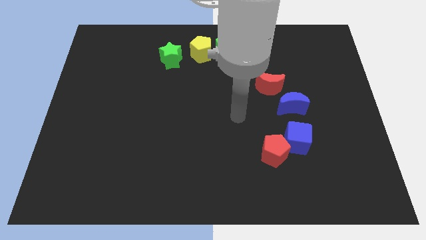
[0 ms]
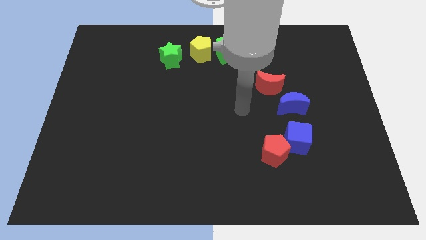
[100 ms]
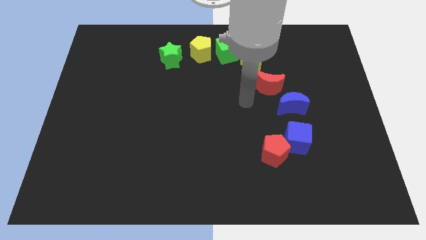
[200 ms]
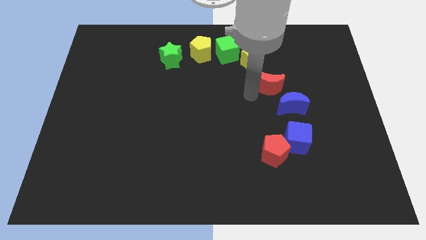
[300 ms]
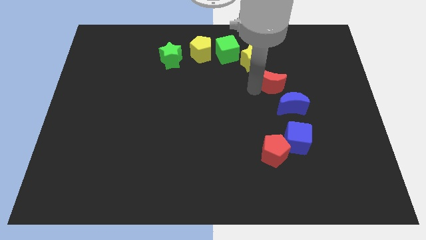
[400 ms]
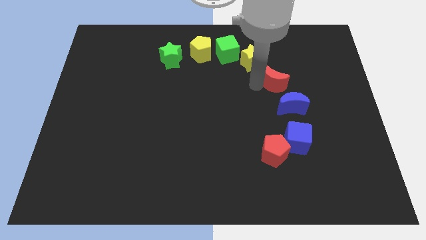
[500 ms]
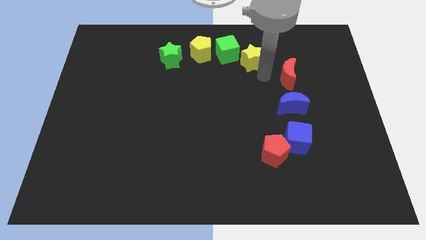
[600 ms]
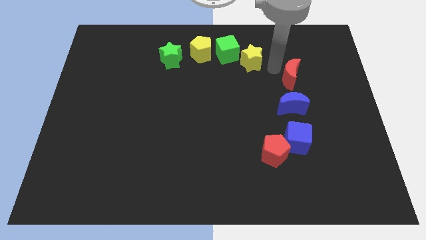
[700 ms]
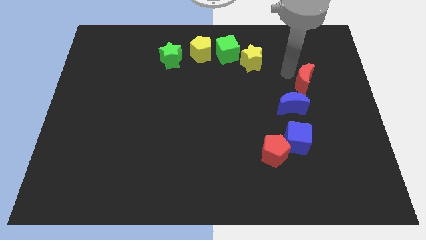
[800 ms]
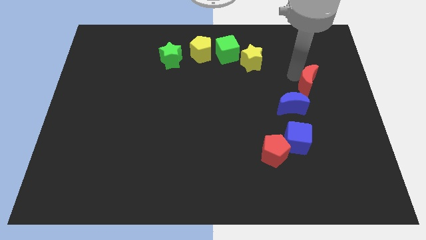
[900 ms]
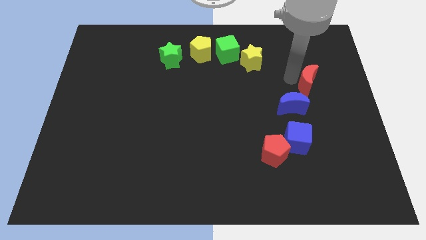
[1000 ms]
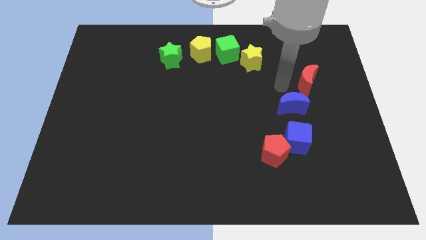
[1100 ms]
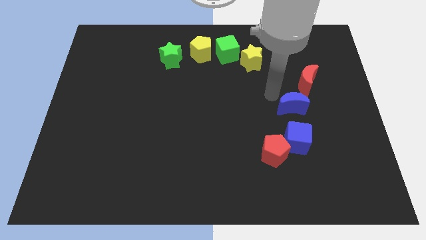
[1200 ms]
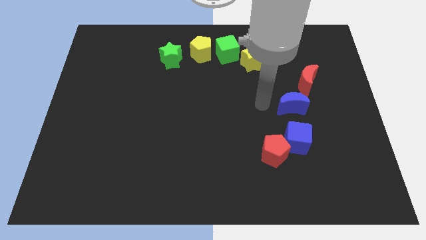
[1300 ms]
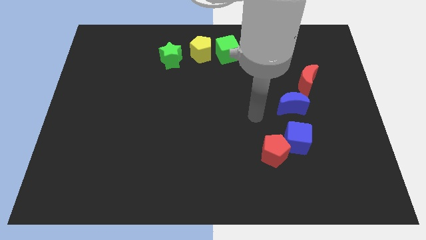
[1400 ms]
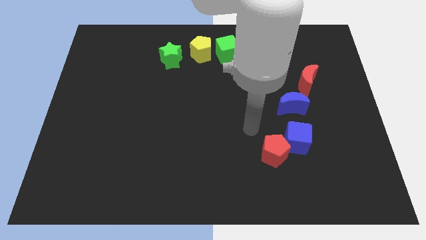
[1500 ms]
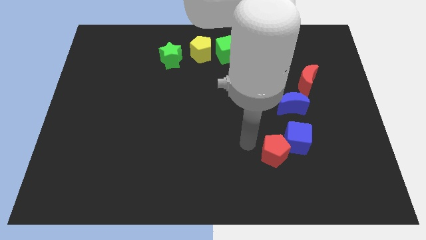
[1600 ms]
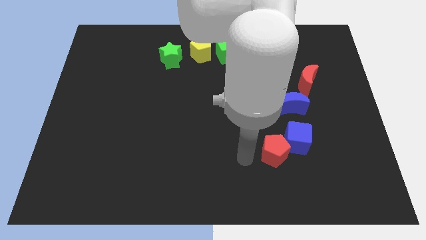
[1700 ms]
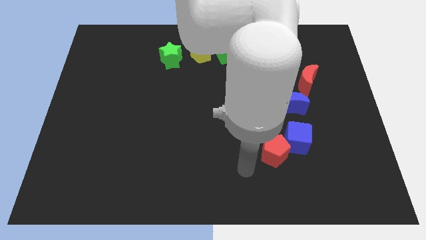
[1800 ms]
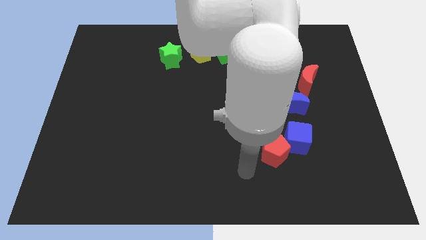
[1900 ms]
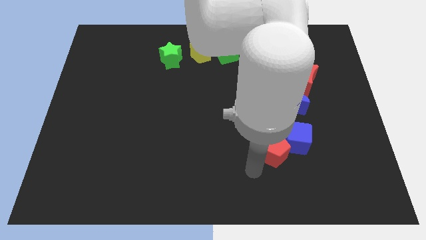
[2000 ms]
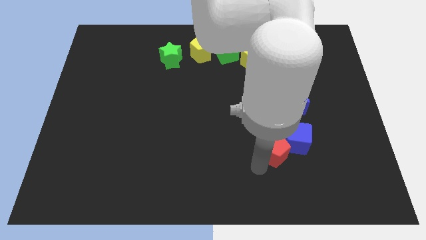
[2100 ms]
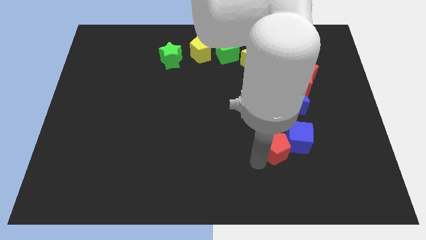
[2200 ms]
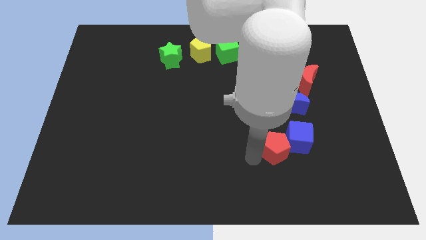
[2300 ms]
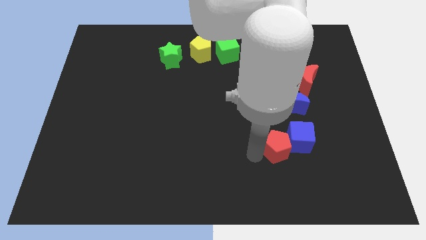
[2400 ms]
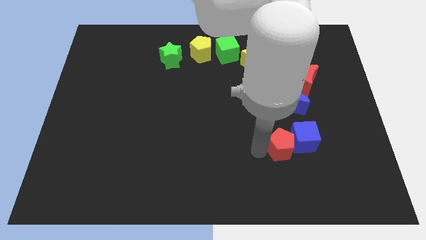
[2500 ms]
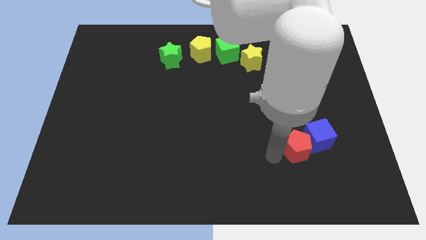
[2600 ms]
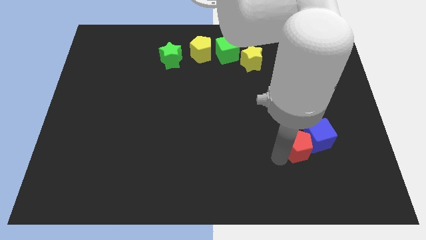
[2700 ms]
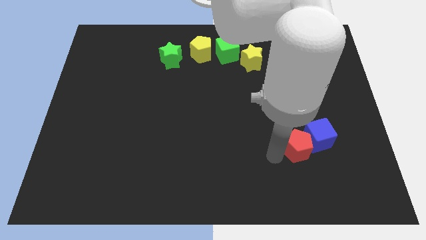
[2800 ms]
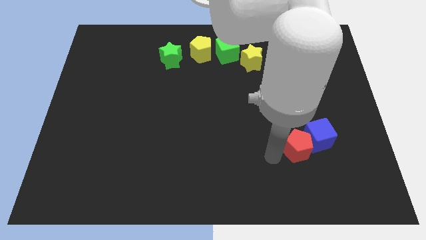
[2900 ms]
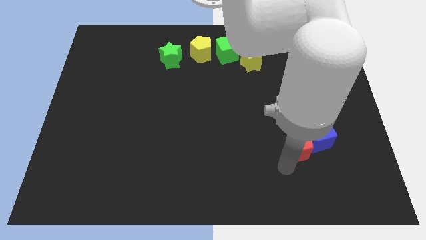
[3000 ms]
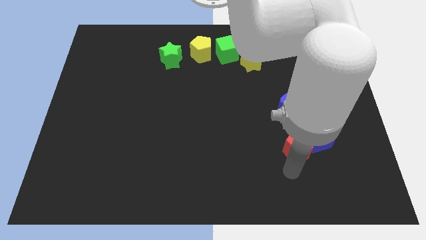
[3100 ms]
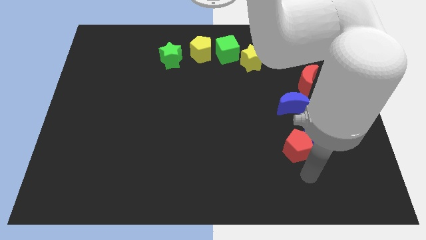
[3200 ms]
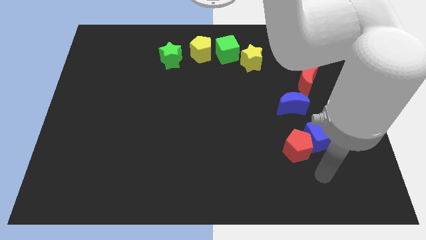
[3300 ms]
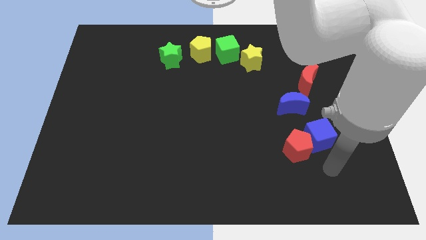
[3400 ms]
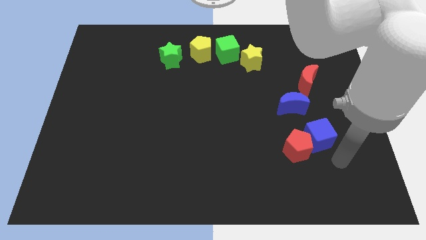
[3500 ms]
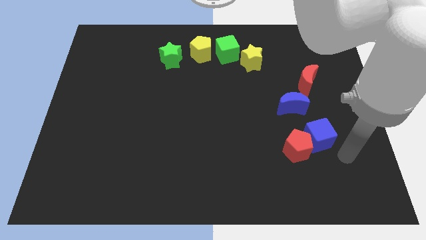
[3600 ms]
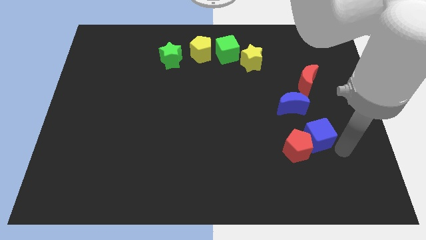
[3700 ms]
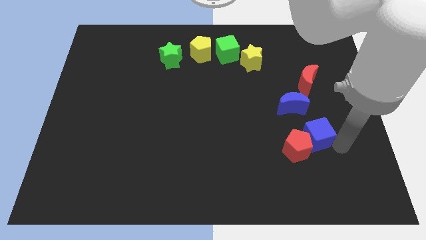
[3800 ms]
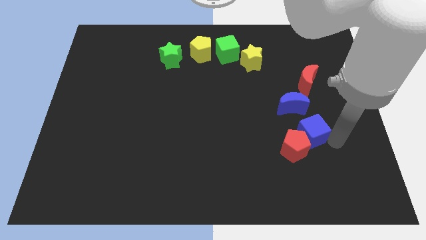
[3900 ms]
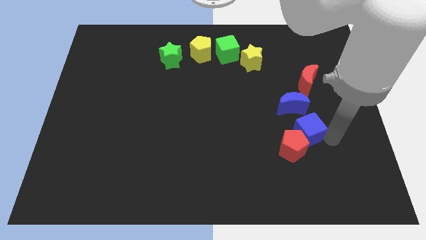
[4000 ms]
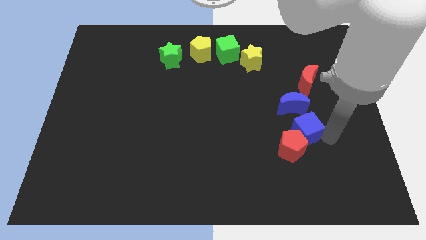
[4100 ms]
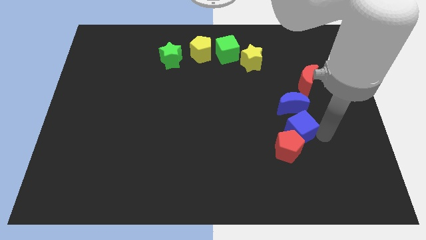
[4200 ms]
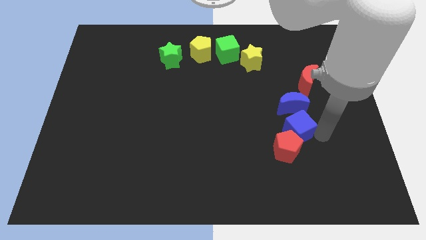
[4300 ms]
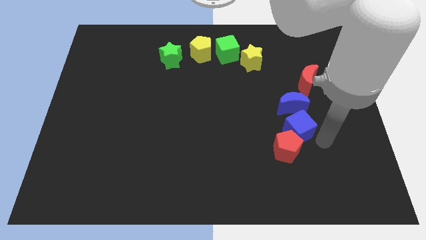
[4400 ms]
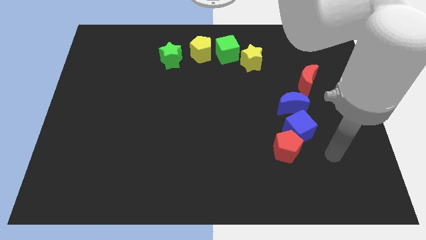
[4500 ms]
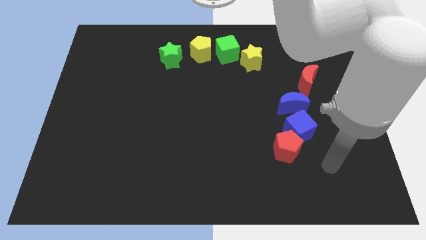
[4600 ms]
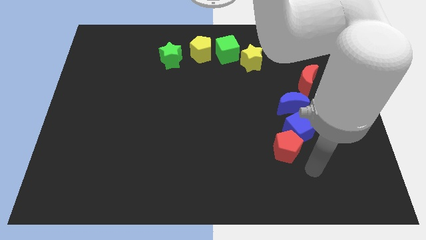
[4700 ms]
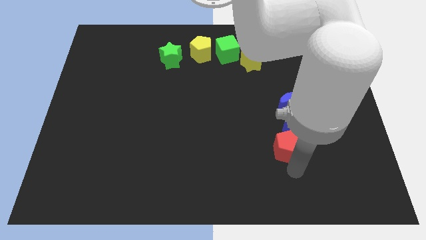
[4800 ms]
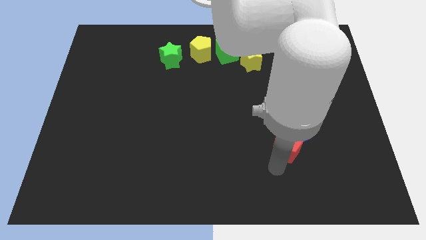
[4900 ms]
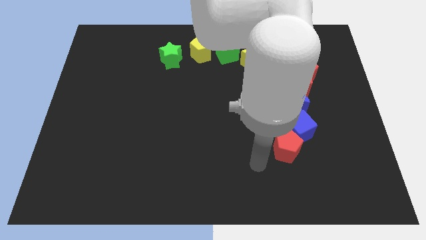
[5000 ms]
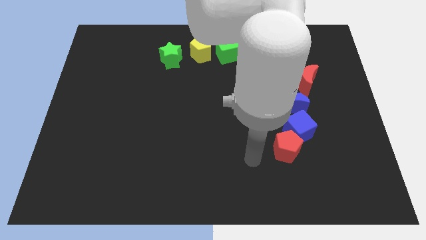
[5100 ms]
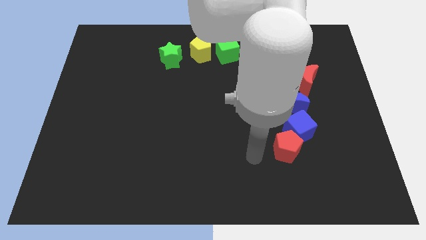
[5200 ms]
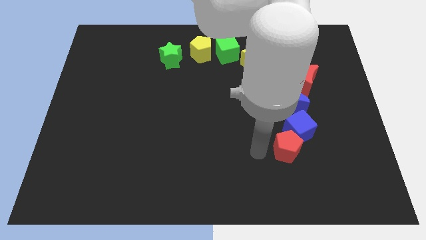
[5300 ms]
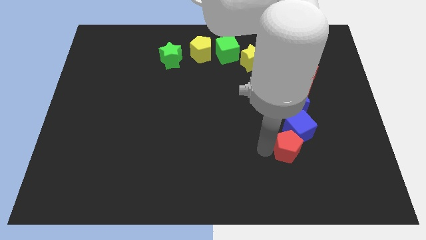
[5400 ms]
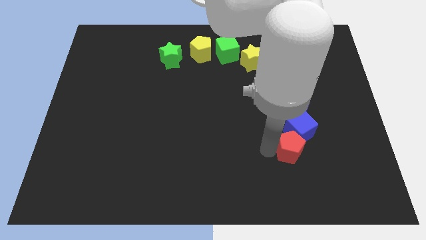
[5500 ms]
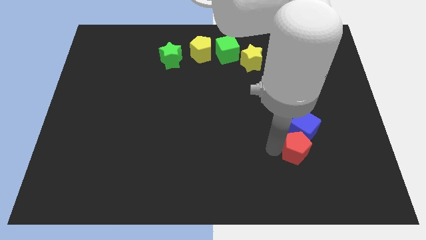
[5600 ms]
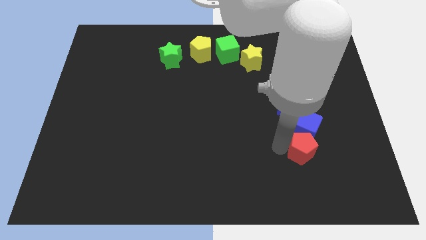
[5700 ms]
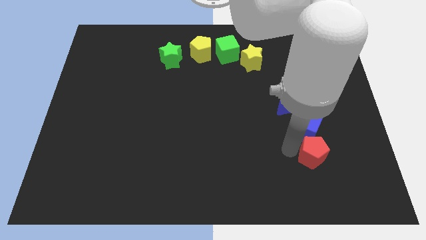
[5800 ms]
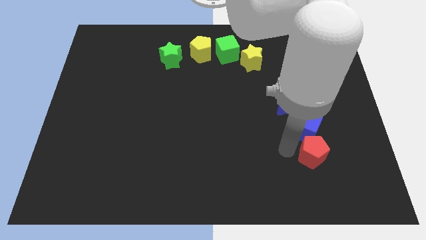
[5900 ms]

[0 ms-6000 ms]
push a group of blocks to the right side of the board

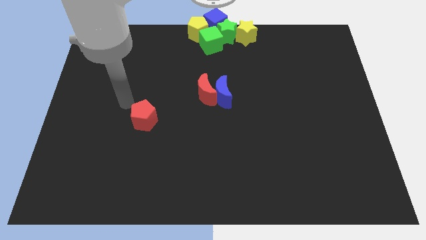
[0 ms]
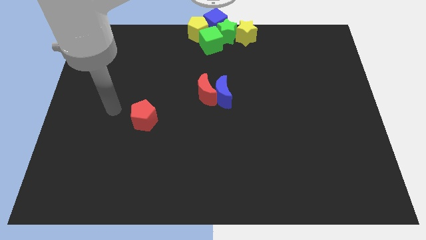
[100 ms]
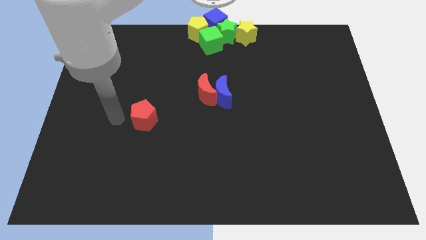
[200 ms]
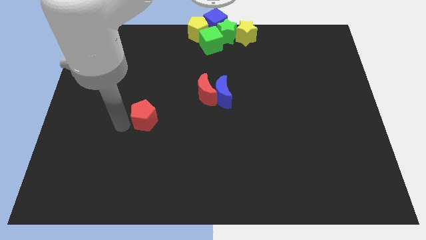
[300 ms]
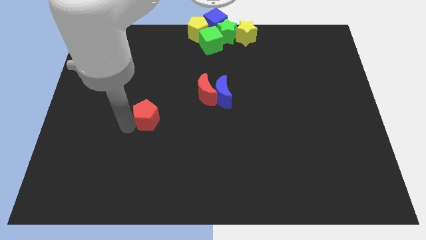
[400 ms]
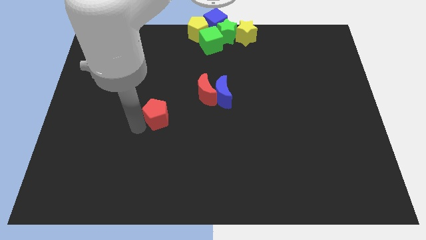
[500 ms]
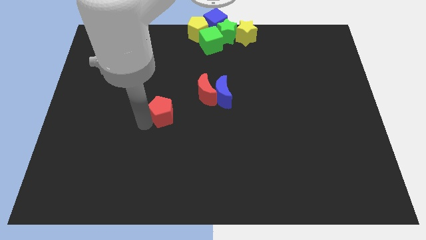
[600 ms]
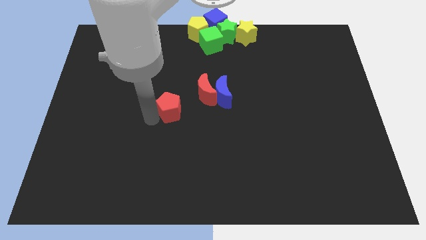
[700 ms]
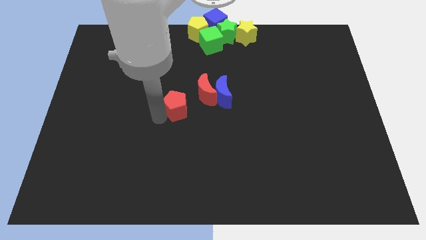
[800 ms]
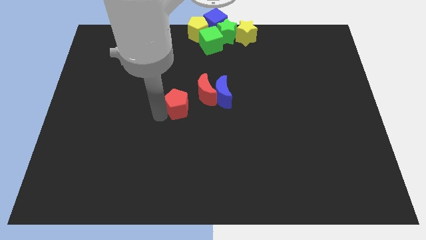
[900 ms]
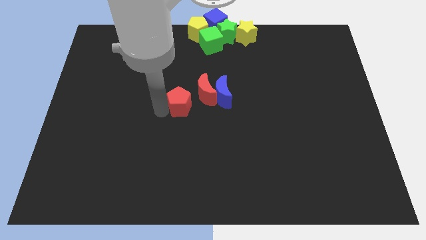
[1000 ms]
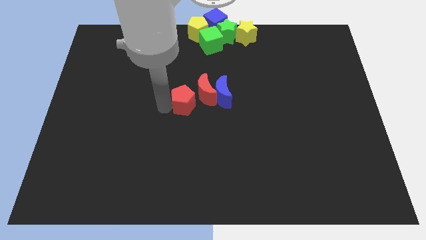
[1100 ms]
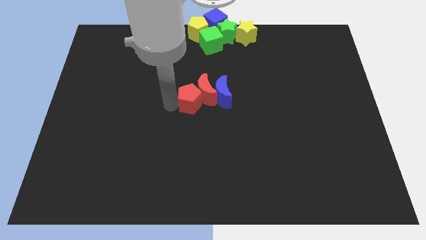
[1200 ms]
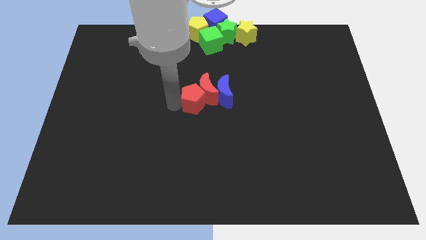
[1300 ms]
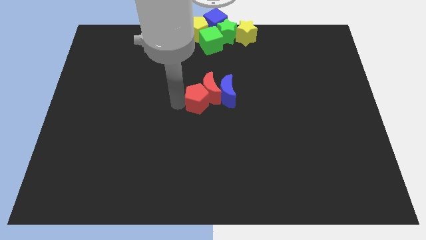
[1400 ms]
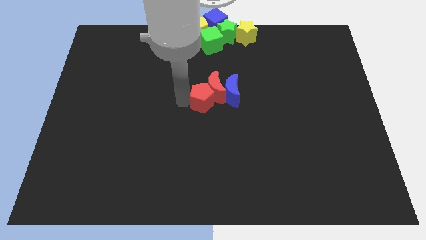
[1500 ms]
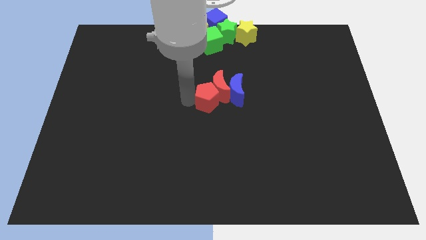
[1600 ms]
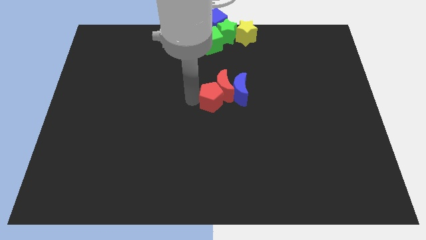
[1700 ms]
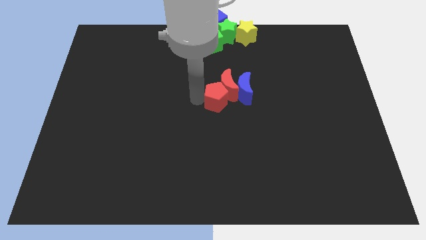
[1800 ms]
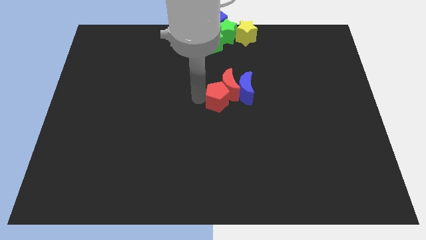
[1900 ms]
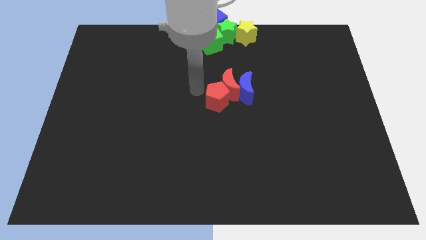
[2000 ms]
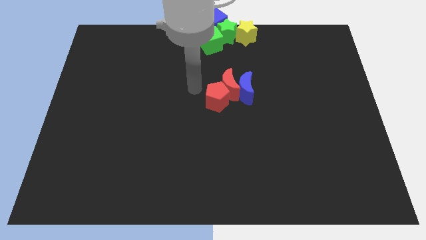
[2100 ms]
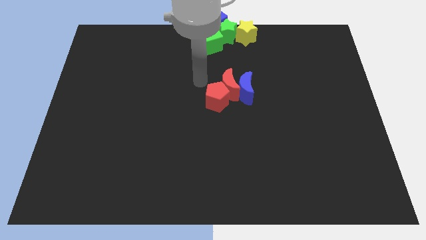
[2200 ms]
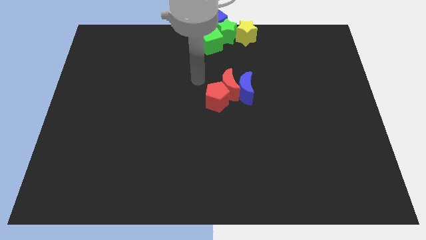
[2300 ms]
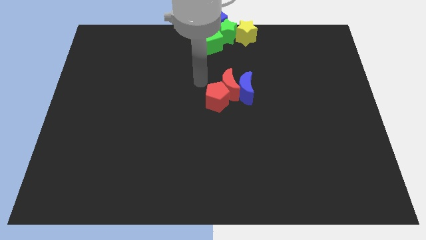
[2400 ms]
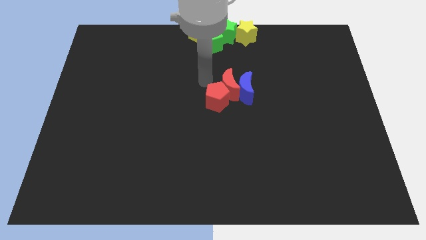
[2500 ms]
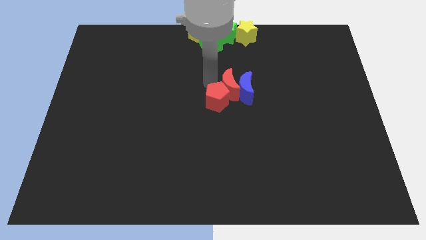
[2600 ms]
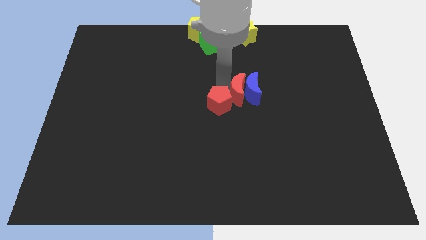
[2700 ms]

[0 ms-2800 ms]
push red pentagon into both the moons

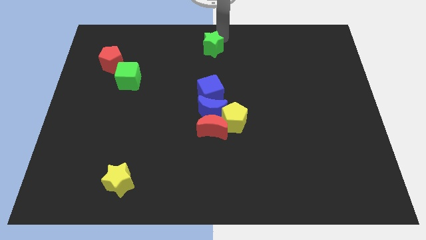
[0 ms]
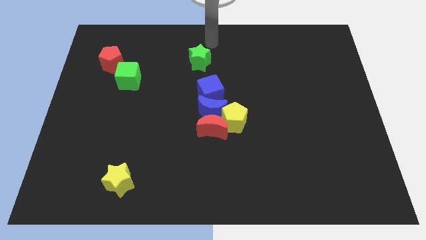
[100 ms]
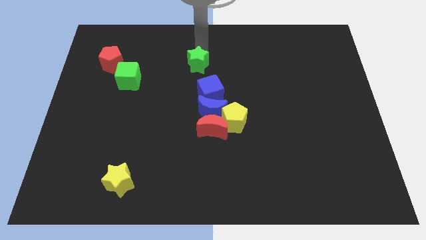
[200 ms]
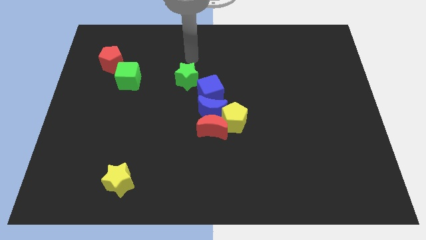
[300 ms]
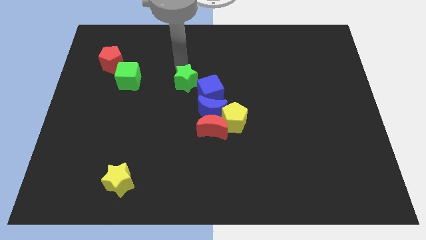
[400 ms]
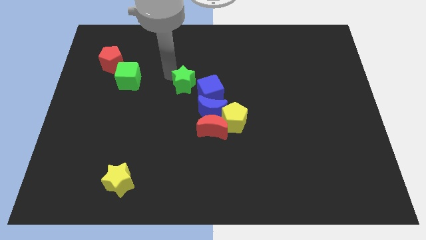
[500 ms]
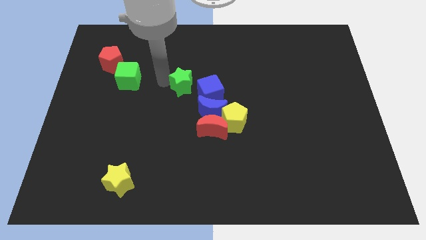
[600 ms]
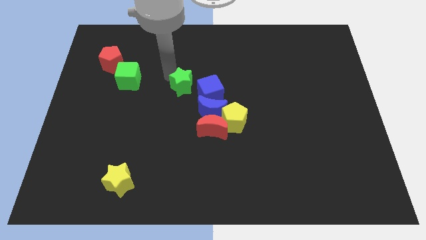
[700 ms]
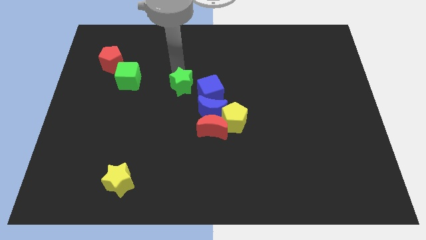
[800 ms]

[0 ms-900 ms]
move the green star to the right of the green cube
